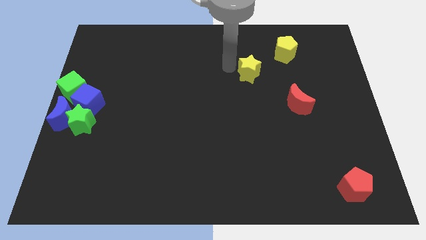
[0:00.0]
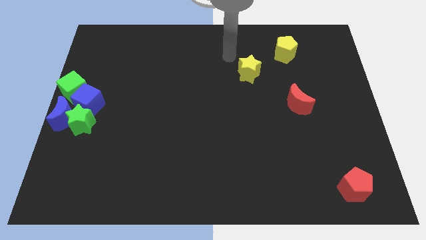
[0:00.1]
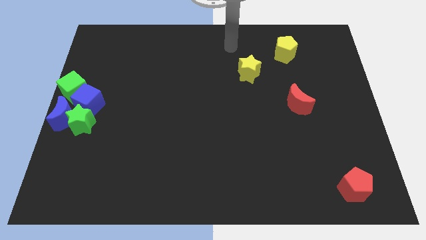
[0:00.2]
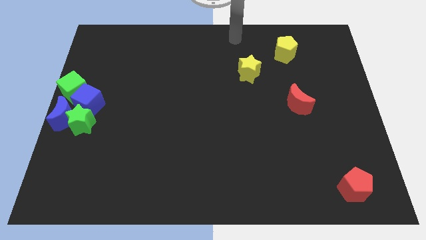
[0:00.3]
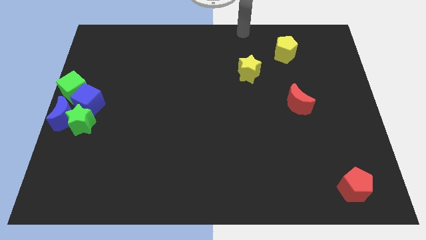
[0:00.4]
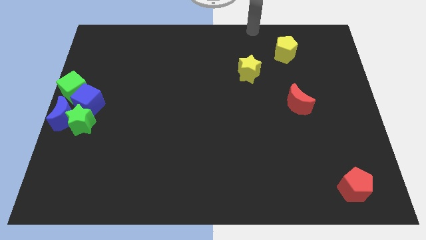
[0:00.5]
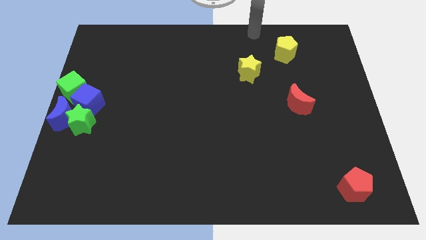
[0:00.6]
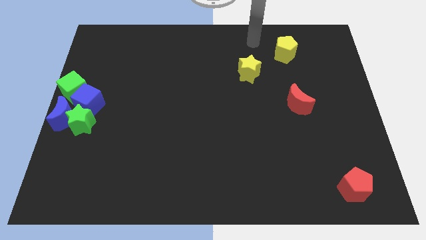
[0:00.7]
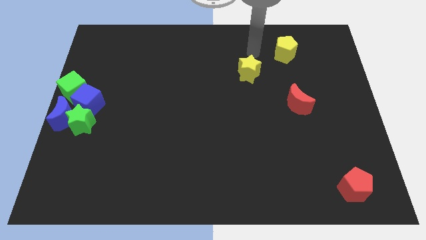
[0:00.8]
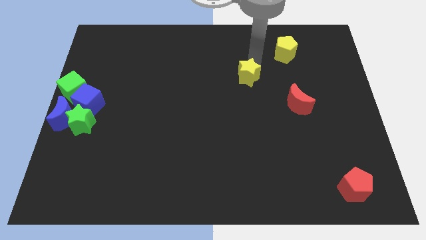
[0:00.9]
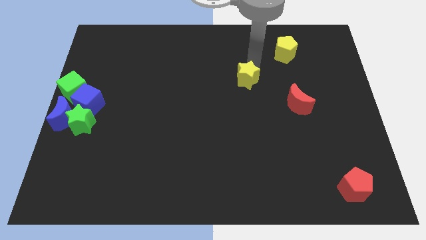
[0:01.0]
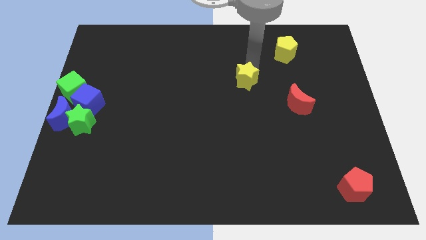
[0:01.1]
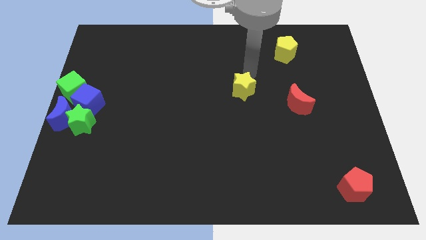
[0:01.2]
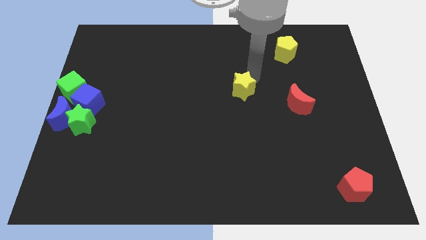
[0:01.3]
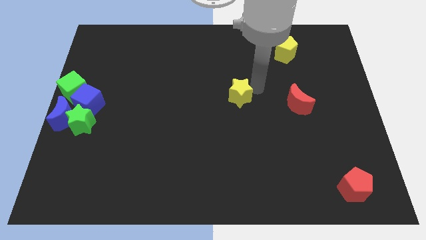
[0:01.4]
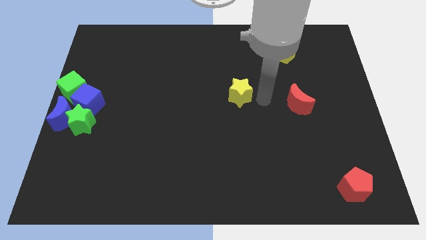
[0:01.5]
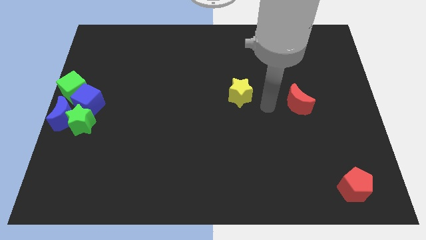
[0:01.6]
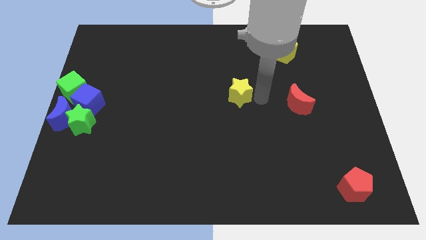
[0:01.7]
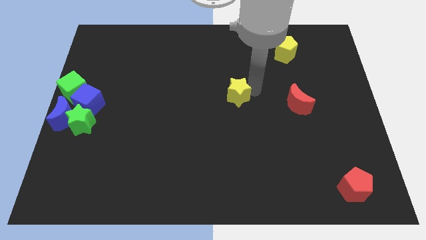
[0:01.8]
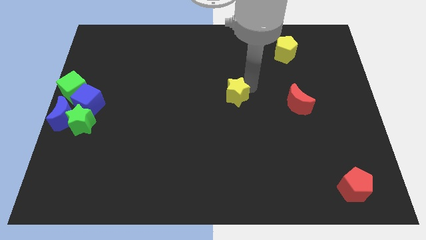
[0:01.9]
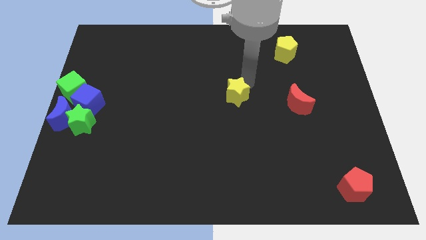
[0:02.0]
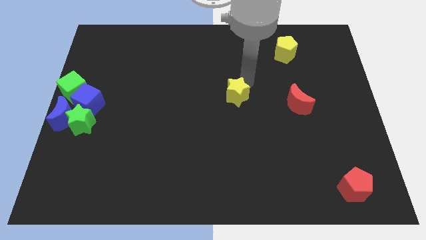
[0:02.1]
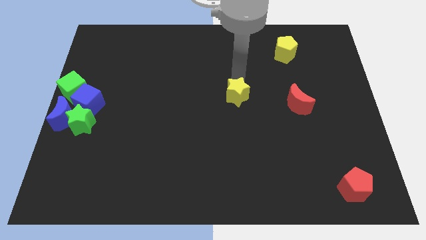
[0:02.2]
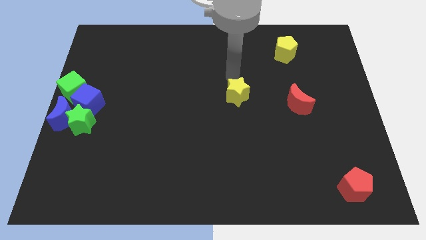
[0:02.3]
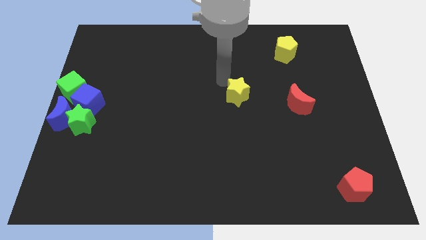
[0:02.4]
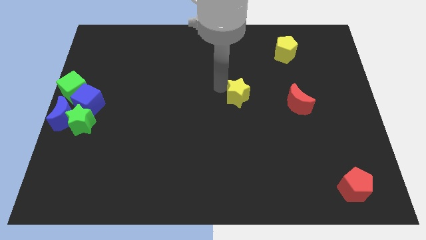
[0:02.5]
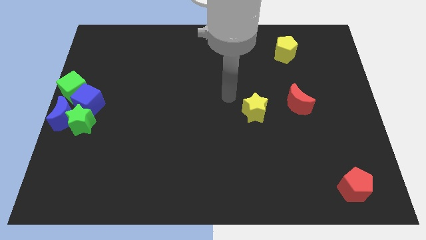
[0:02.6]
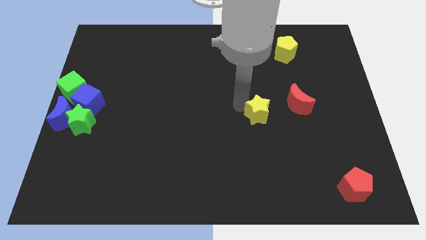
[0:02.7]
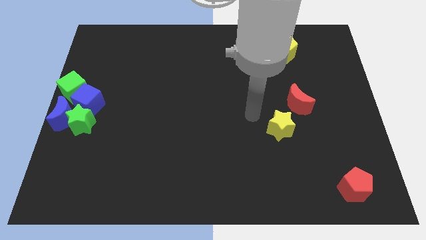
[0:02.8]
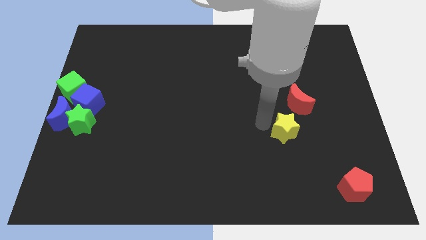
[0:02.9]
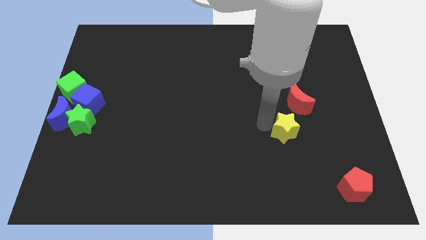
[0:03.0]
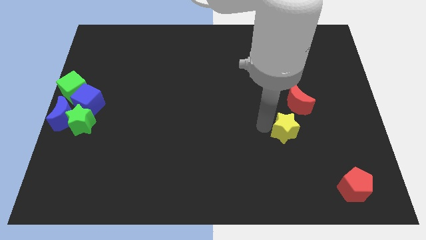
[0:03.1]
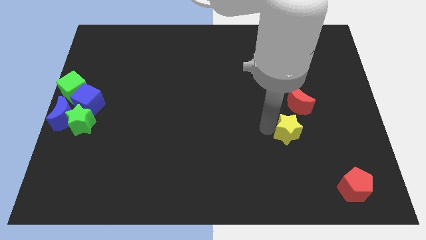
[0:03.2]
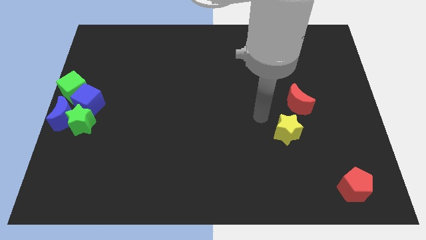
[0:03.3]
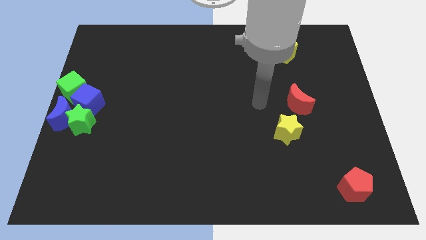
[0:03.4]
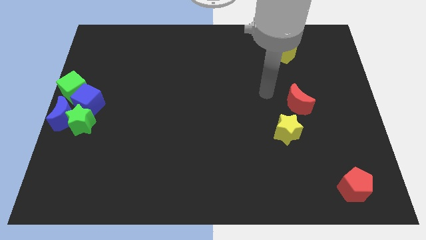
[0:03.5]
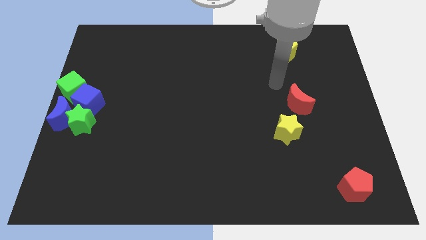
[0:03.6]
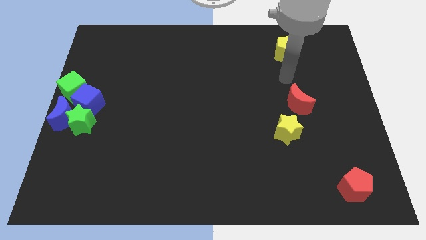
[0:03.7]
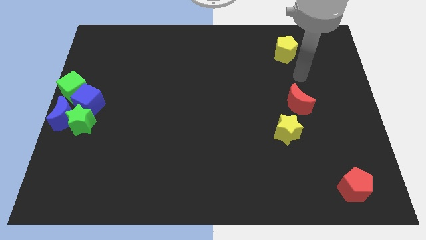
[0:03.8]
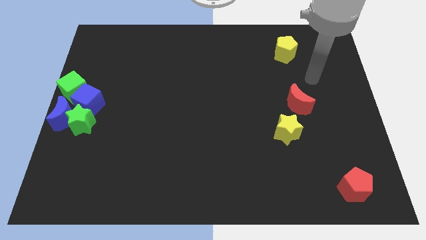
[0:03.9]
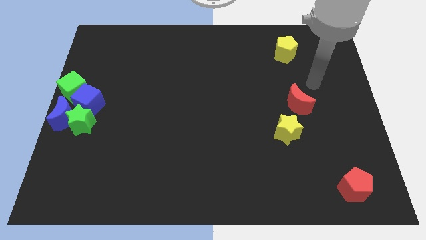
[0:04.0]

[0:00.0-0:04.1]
place yellow star to the bottom left of red moon

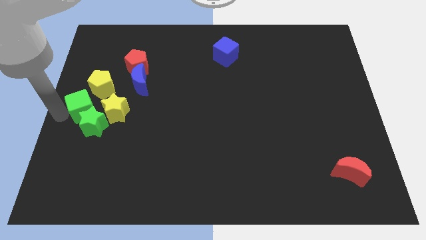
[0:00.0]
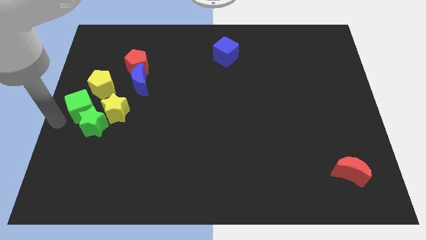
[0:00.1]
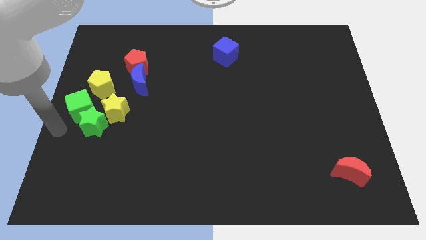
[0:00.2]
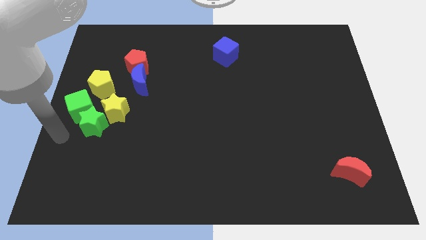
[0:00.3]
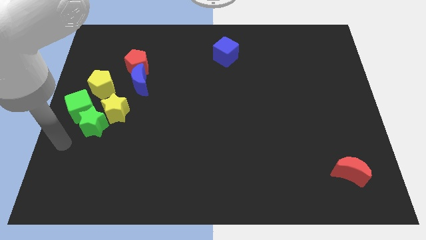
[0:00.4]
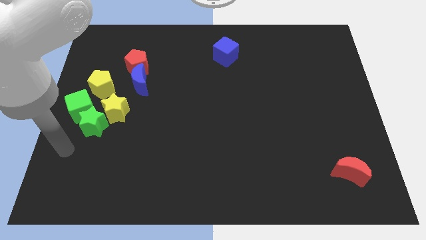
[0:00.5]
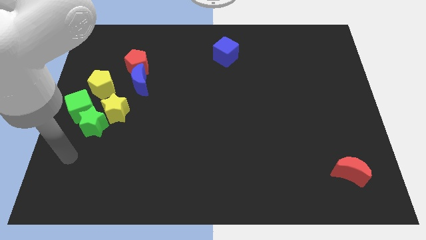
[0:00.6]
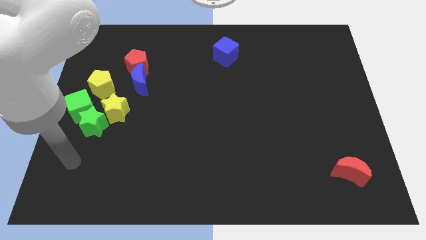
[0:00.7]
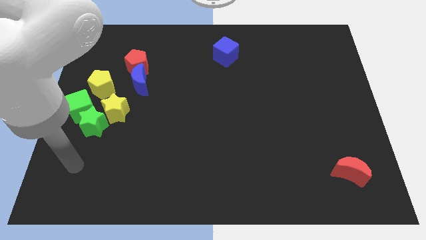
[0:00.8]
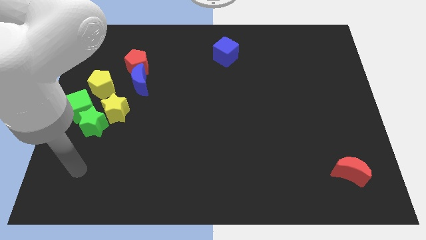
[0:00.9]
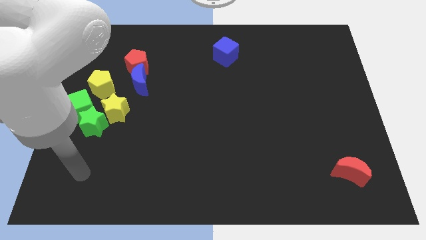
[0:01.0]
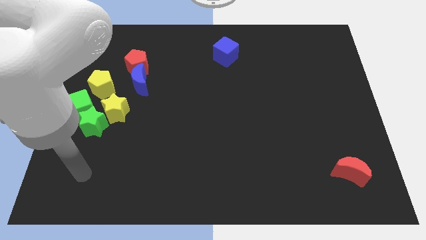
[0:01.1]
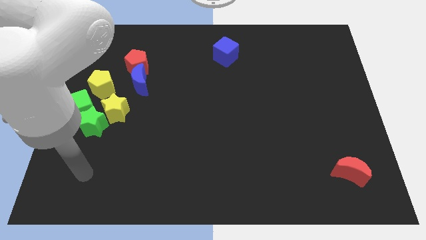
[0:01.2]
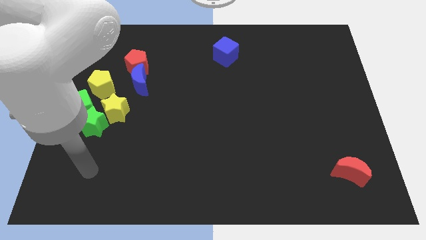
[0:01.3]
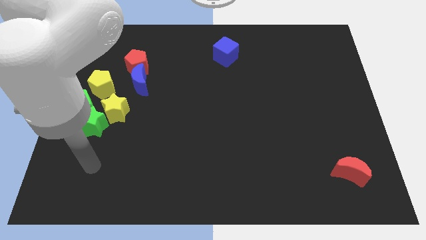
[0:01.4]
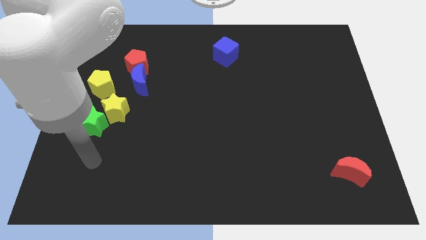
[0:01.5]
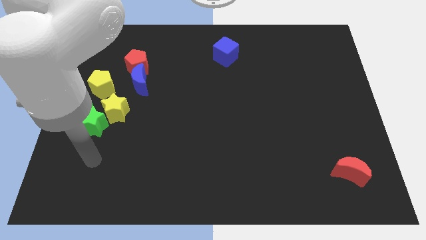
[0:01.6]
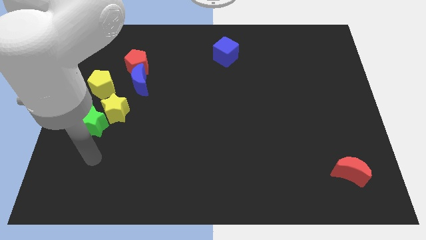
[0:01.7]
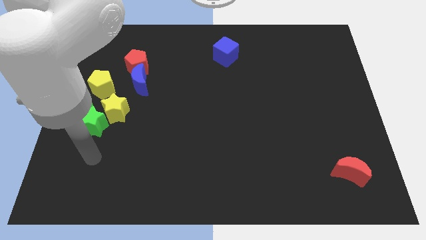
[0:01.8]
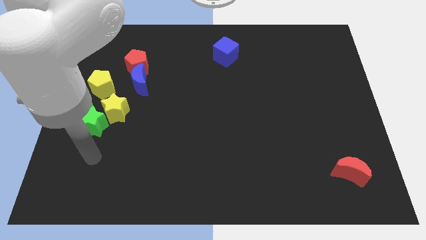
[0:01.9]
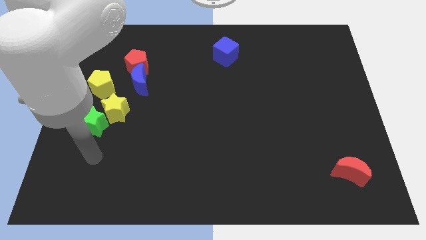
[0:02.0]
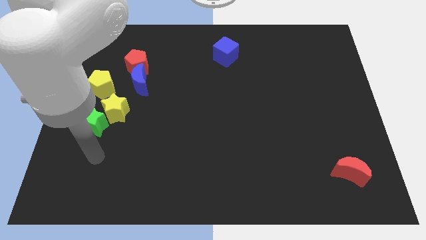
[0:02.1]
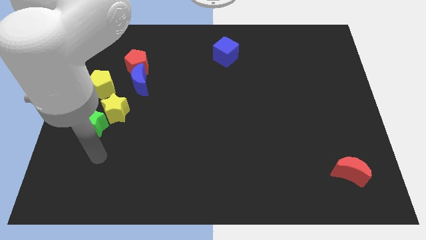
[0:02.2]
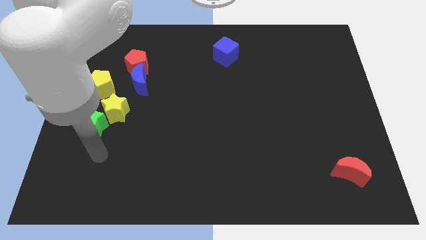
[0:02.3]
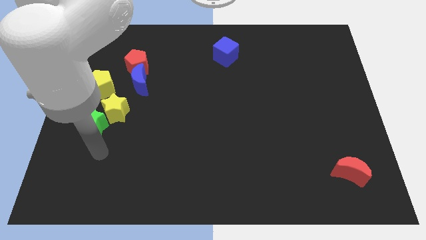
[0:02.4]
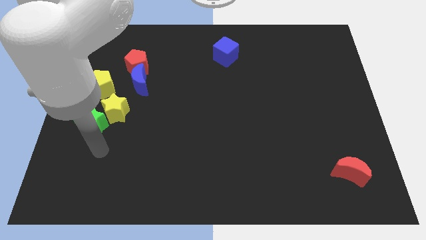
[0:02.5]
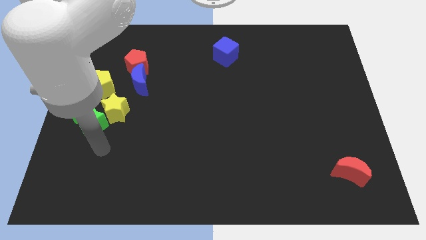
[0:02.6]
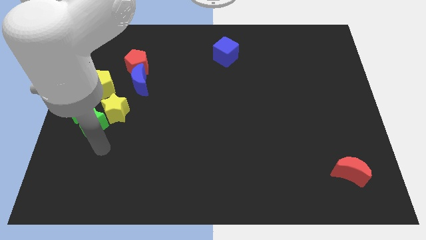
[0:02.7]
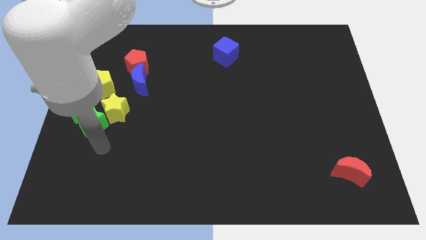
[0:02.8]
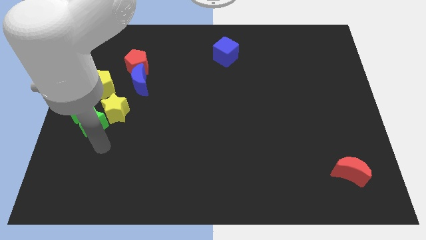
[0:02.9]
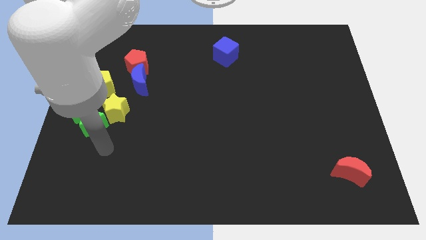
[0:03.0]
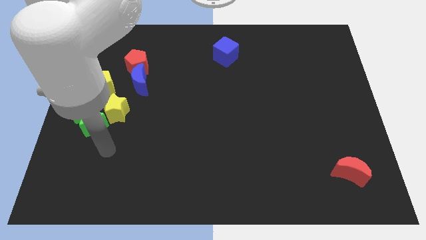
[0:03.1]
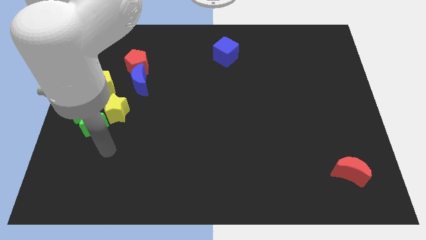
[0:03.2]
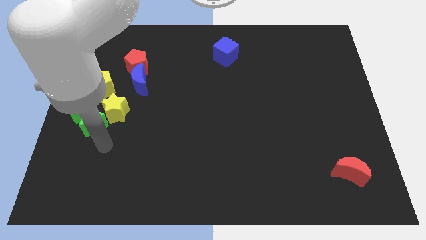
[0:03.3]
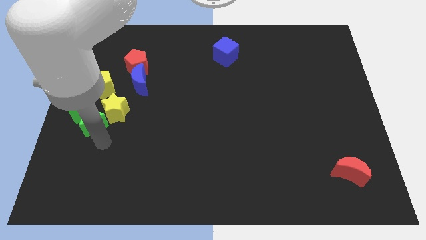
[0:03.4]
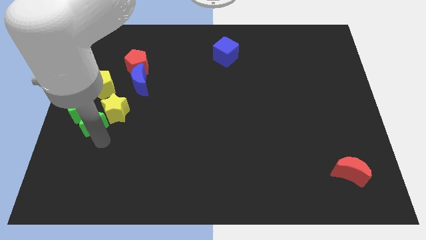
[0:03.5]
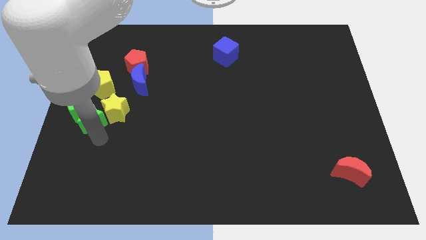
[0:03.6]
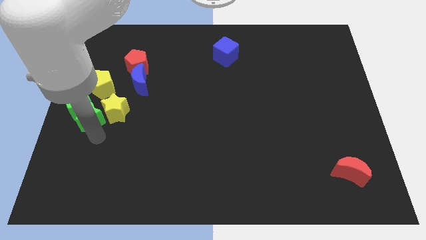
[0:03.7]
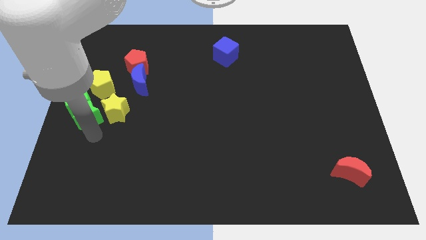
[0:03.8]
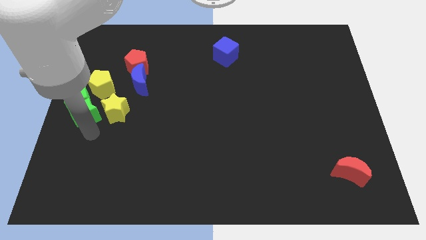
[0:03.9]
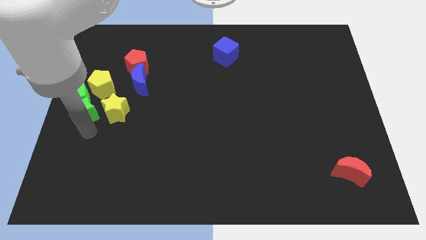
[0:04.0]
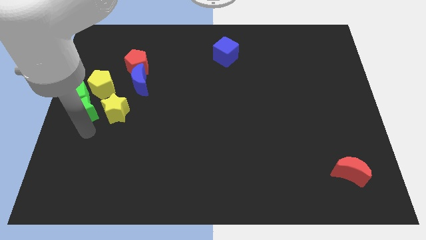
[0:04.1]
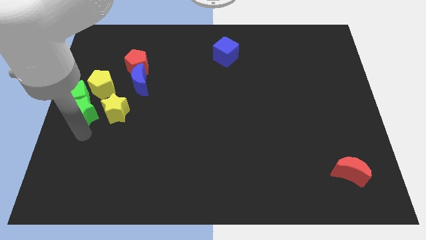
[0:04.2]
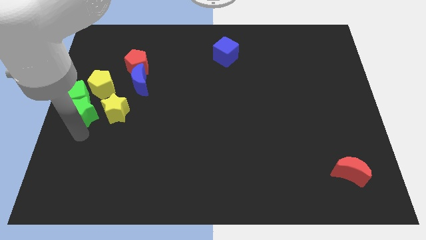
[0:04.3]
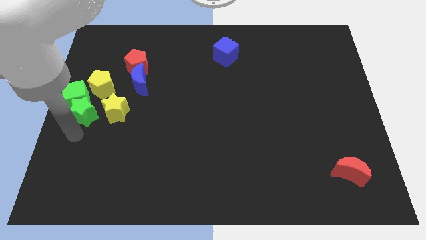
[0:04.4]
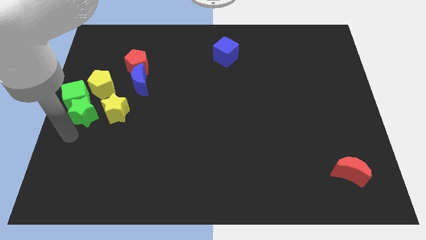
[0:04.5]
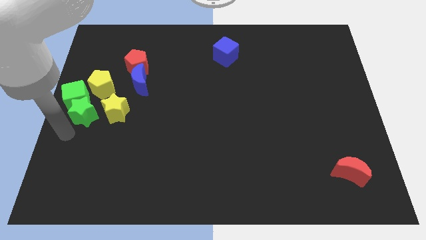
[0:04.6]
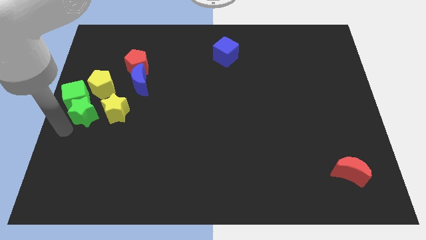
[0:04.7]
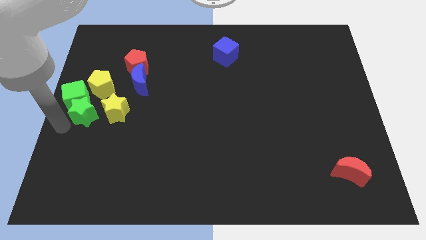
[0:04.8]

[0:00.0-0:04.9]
push the green star into green cube

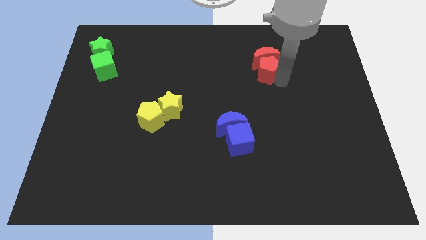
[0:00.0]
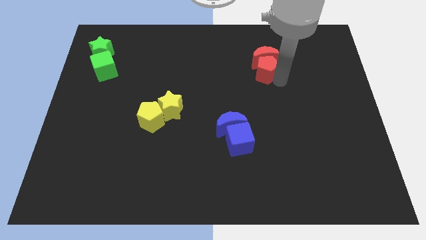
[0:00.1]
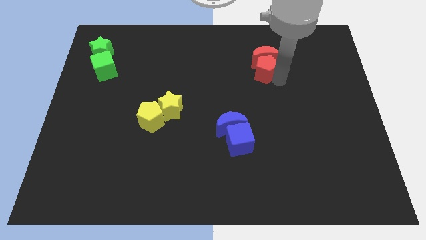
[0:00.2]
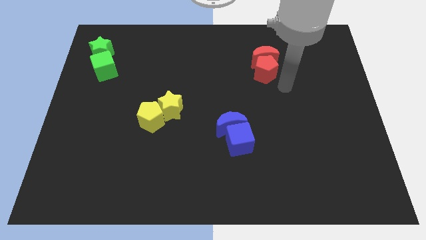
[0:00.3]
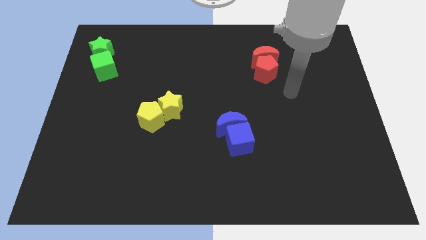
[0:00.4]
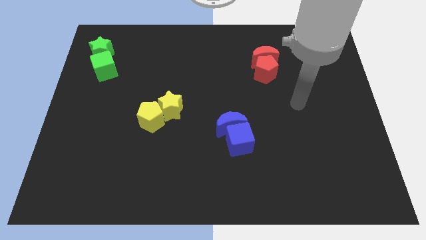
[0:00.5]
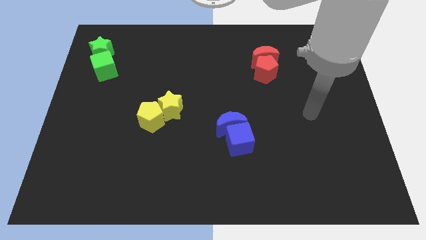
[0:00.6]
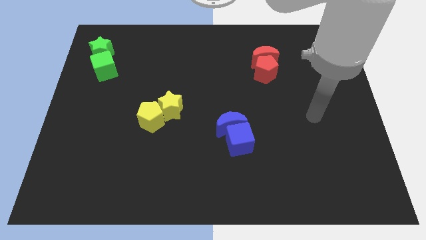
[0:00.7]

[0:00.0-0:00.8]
move your arm away from red blocks
